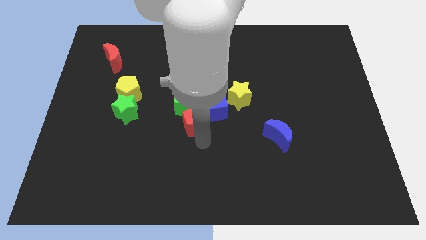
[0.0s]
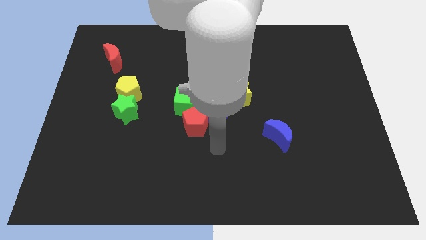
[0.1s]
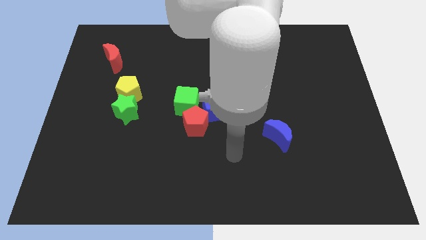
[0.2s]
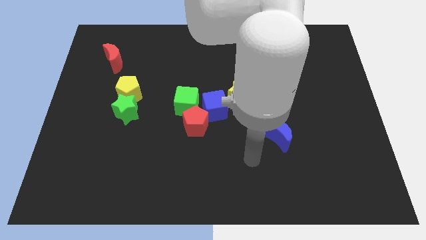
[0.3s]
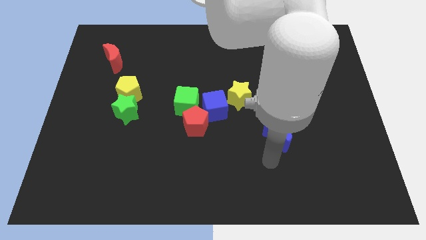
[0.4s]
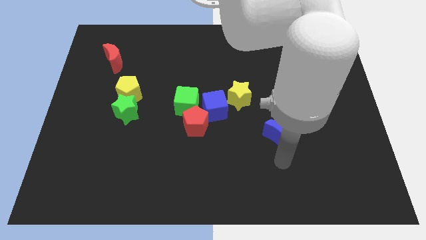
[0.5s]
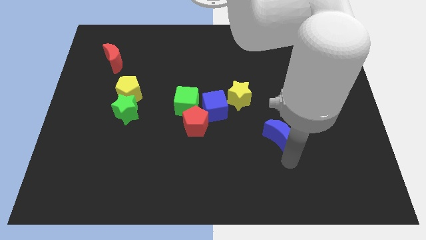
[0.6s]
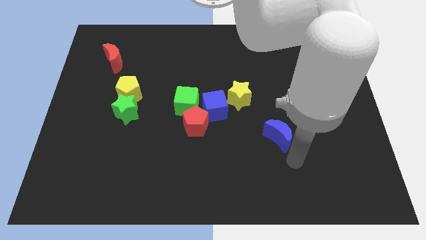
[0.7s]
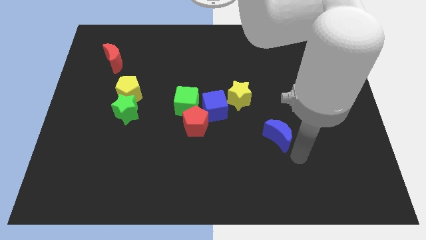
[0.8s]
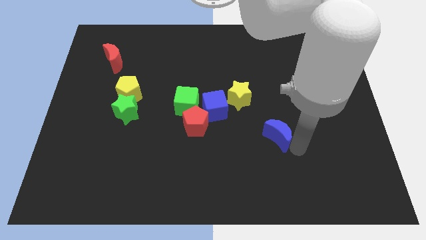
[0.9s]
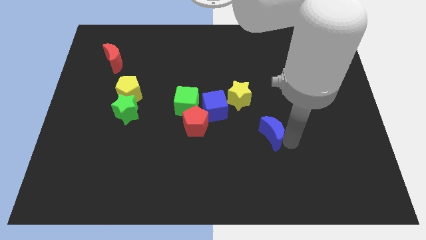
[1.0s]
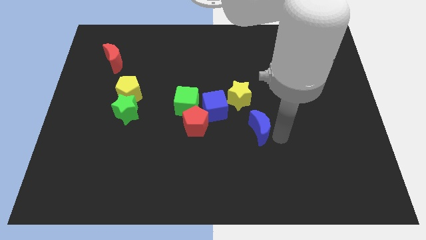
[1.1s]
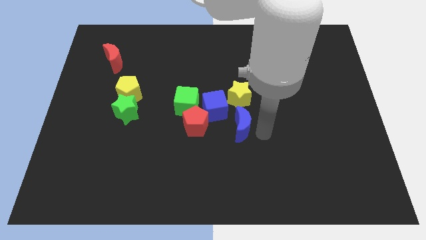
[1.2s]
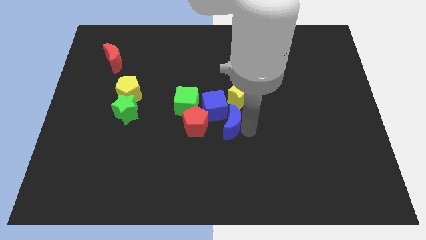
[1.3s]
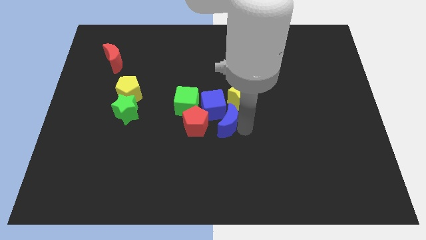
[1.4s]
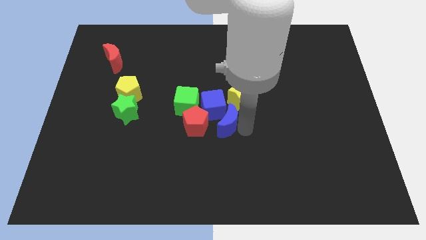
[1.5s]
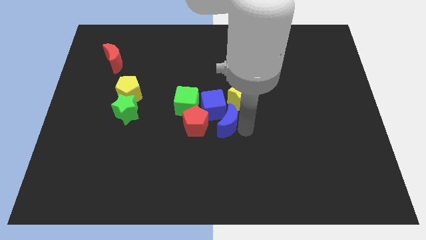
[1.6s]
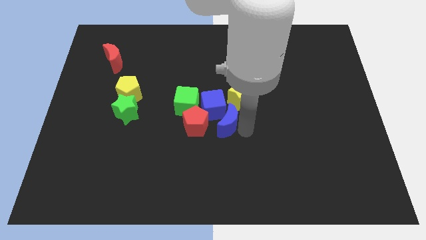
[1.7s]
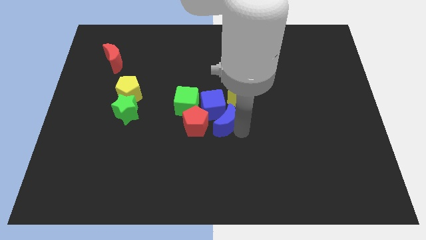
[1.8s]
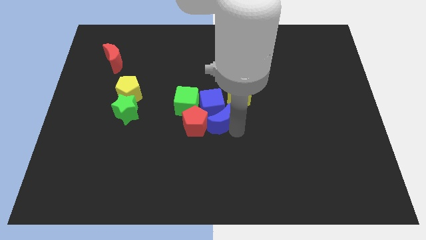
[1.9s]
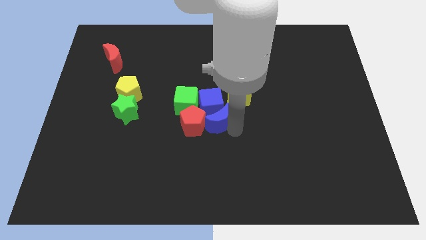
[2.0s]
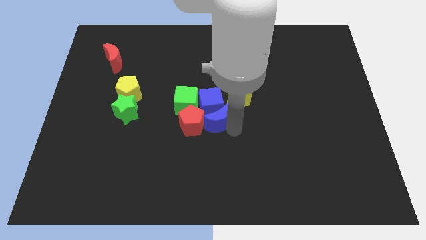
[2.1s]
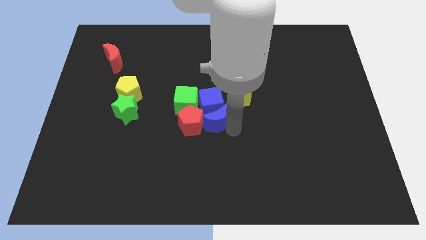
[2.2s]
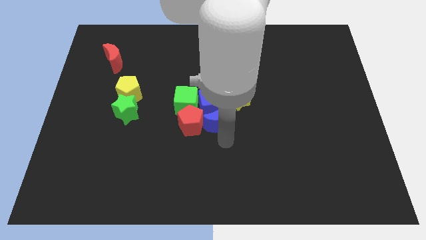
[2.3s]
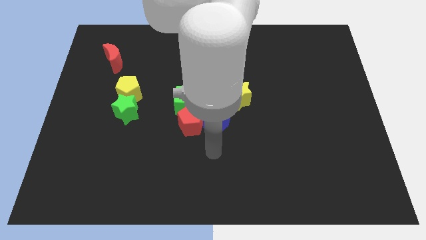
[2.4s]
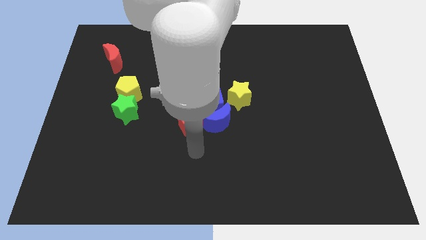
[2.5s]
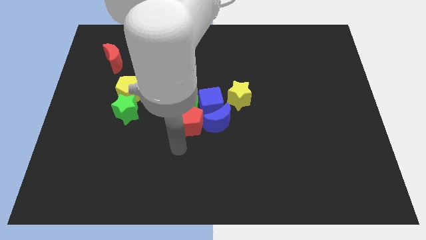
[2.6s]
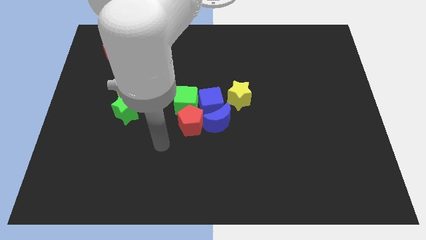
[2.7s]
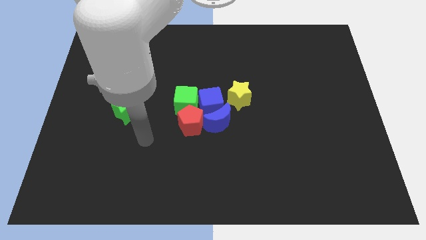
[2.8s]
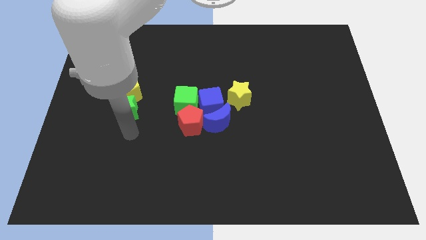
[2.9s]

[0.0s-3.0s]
push the blue crescent into the blue cube

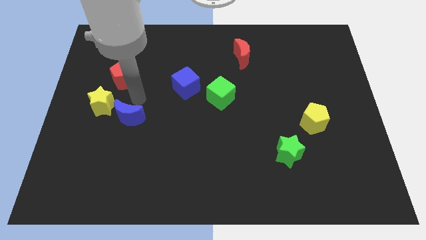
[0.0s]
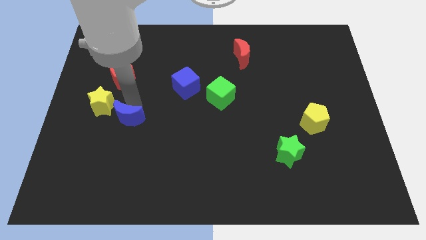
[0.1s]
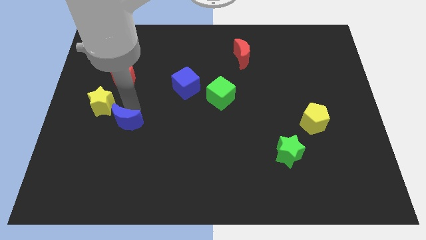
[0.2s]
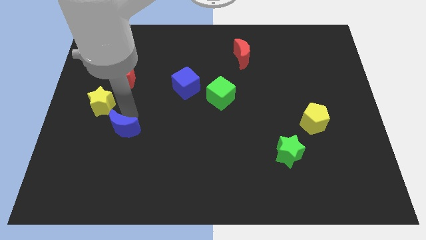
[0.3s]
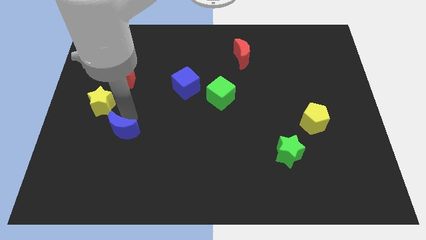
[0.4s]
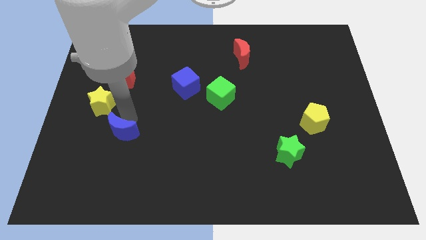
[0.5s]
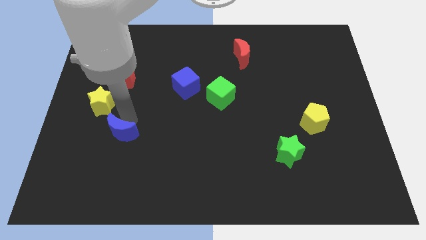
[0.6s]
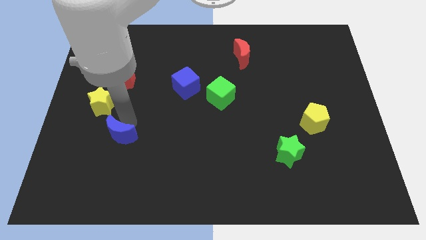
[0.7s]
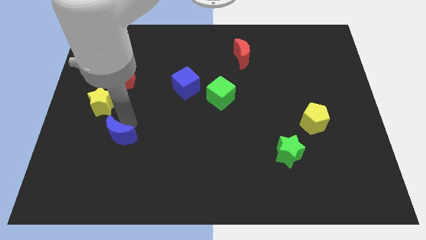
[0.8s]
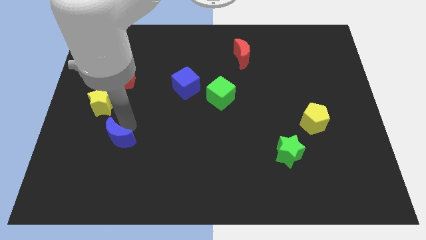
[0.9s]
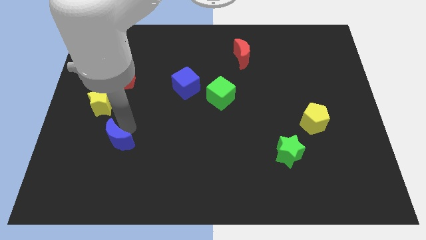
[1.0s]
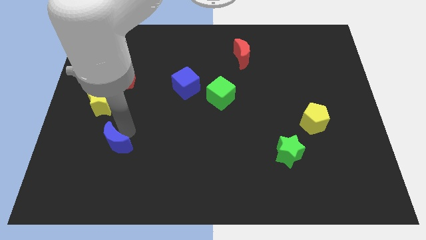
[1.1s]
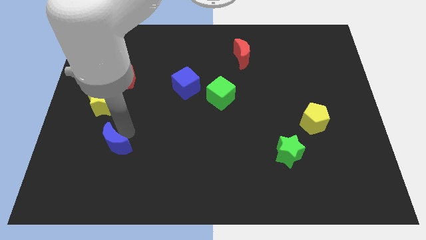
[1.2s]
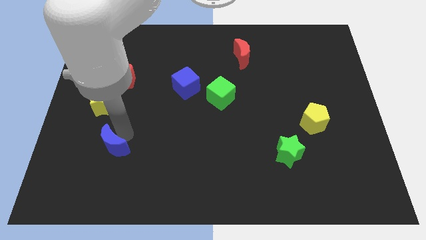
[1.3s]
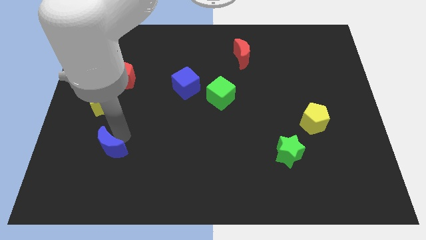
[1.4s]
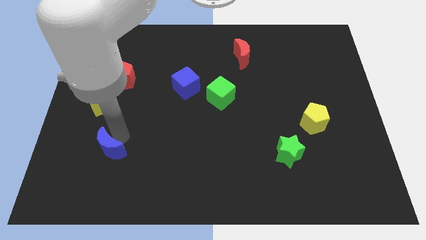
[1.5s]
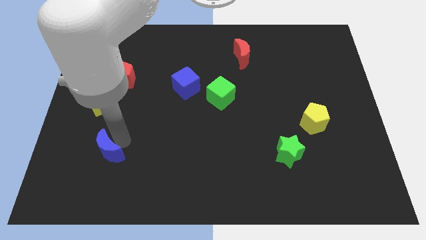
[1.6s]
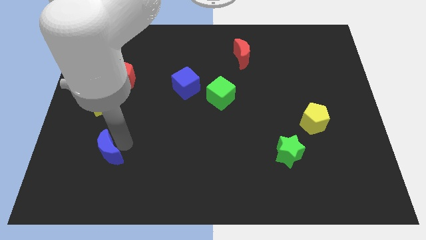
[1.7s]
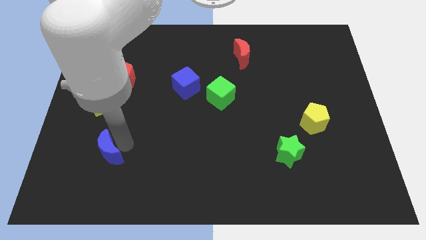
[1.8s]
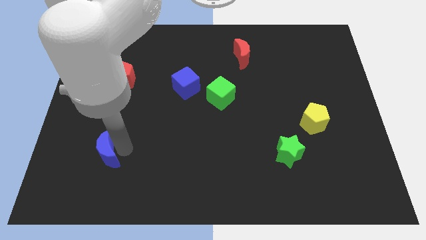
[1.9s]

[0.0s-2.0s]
push the blue crescent towards down

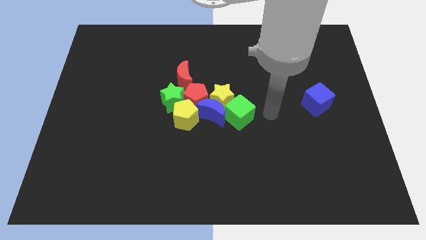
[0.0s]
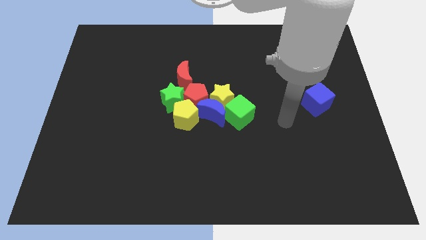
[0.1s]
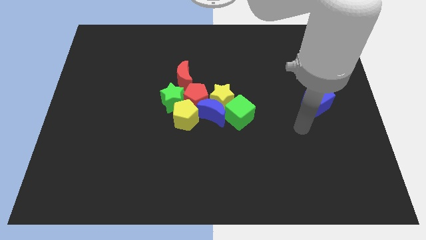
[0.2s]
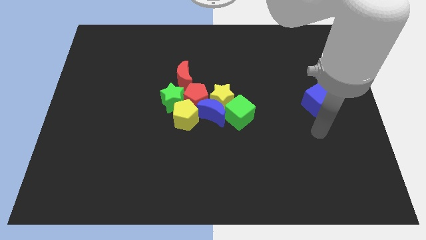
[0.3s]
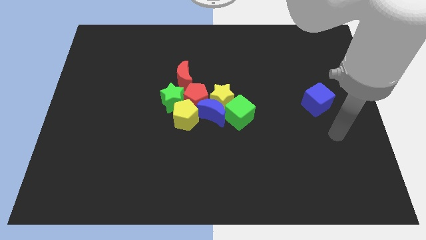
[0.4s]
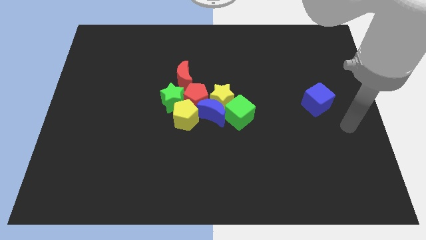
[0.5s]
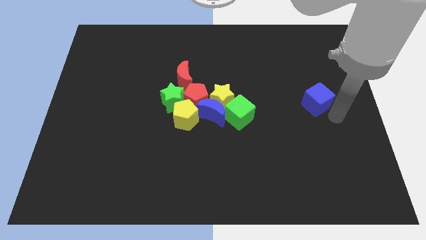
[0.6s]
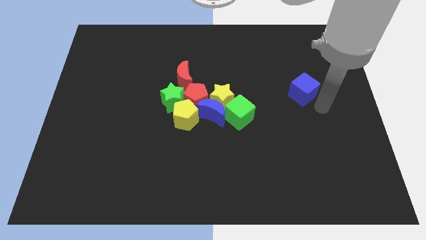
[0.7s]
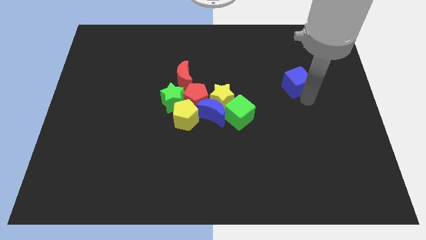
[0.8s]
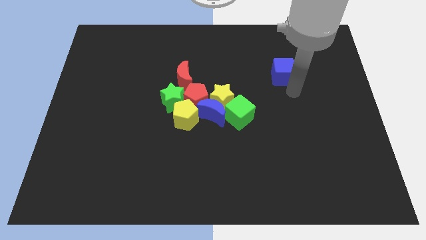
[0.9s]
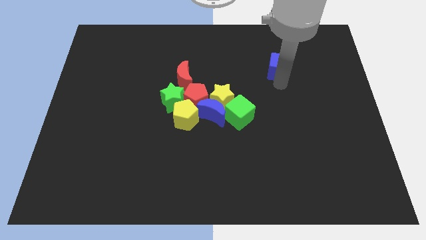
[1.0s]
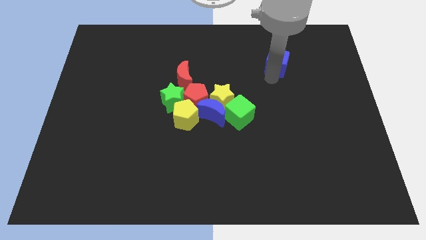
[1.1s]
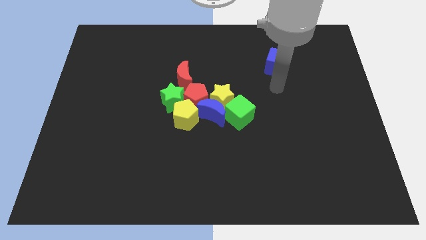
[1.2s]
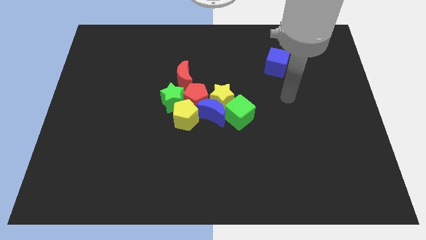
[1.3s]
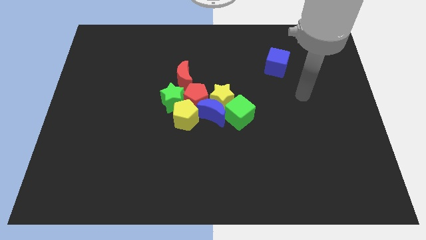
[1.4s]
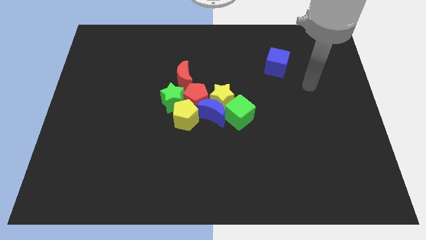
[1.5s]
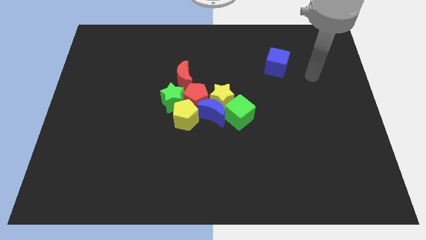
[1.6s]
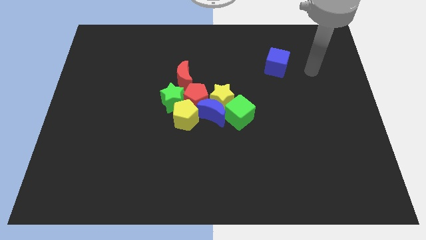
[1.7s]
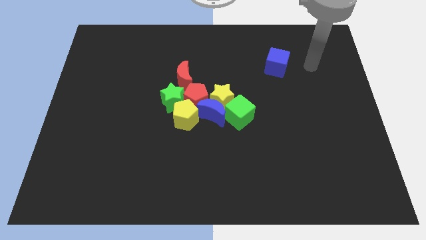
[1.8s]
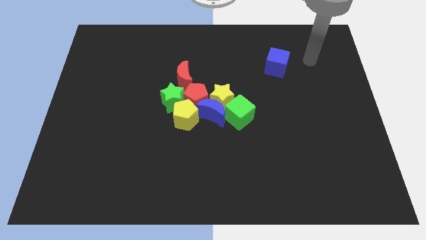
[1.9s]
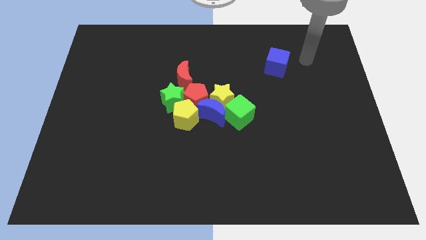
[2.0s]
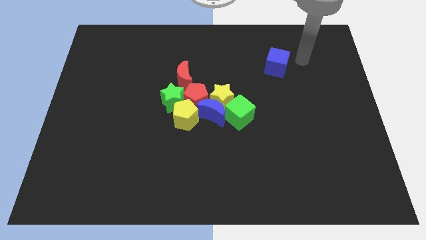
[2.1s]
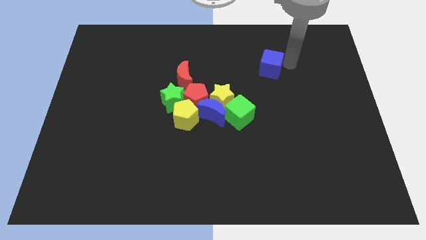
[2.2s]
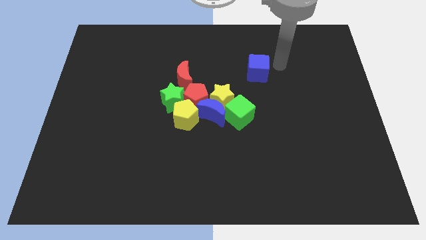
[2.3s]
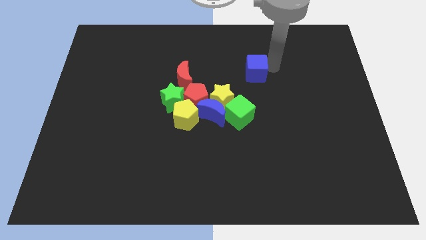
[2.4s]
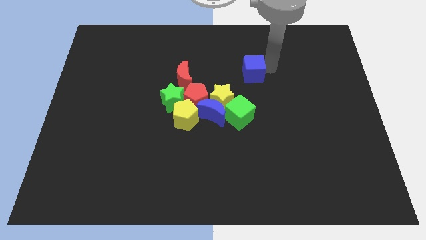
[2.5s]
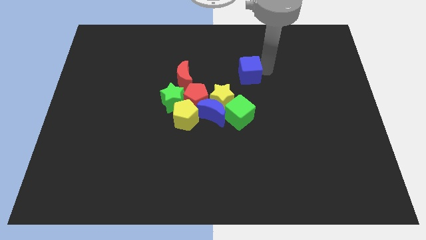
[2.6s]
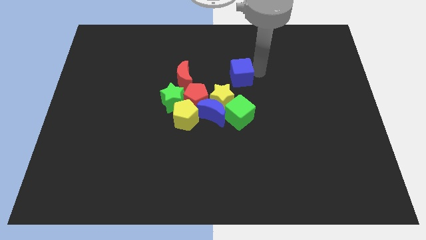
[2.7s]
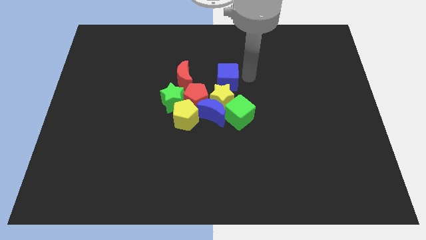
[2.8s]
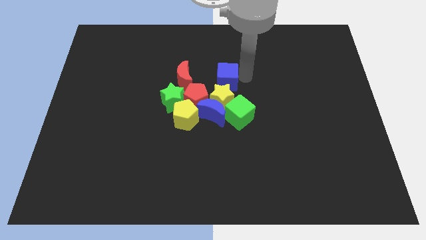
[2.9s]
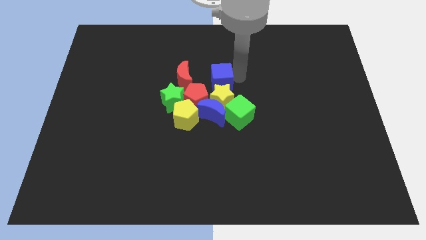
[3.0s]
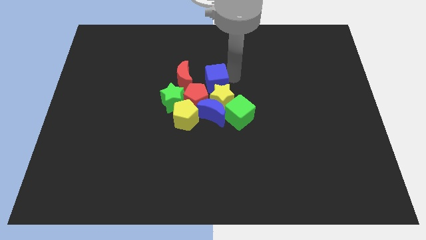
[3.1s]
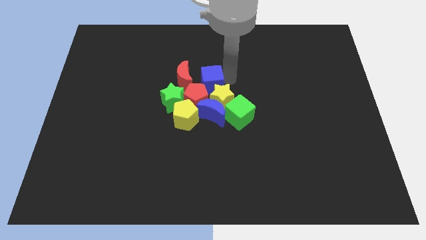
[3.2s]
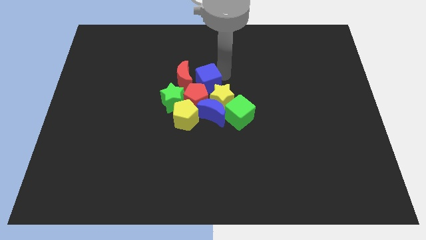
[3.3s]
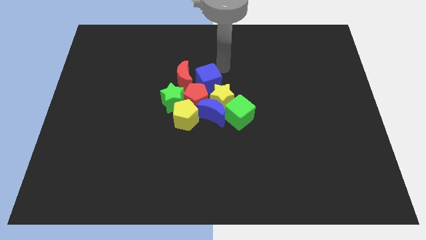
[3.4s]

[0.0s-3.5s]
move the blue cube to the top of the yellow star

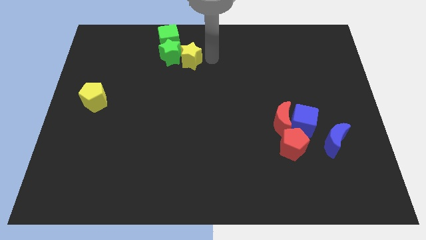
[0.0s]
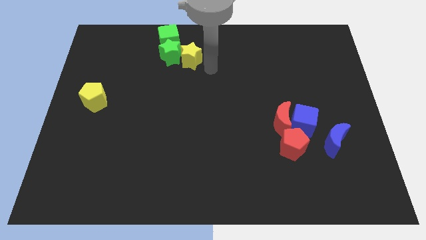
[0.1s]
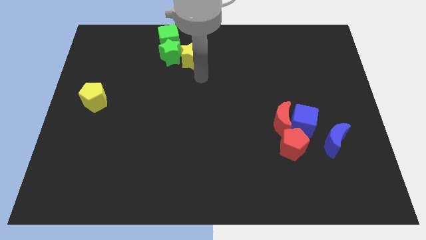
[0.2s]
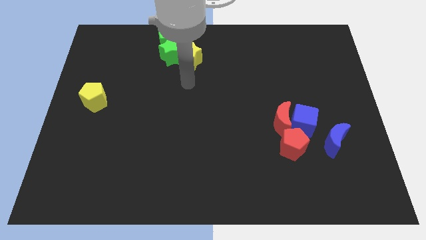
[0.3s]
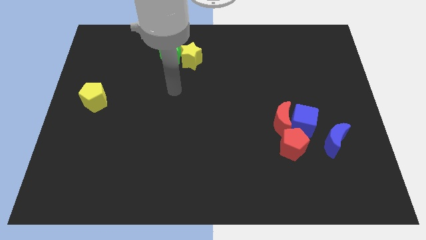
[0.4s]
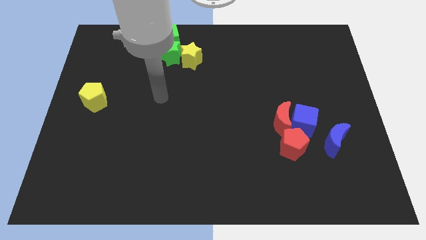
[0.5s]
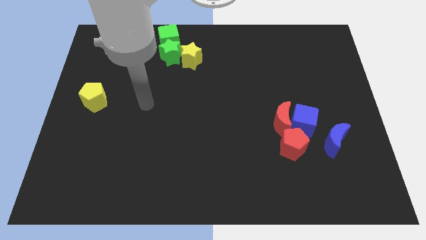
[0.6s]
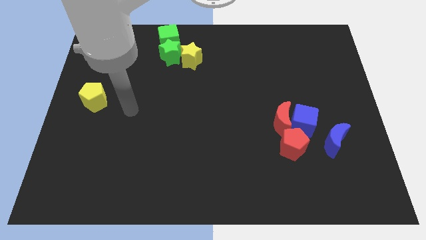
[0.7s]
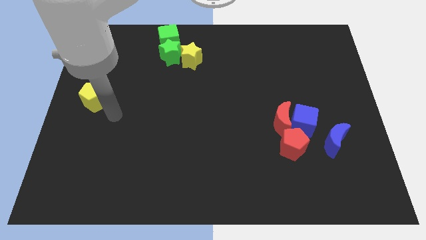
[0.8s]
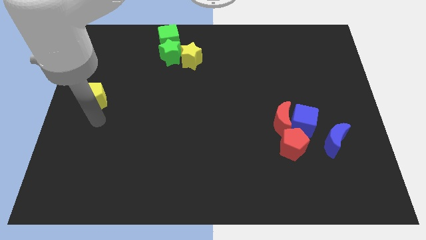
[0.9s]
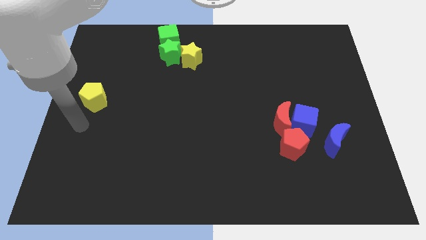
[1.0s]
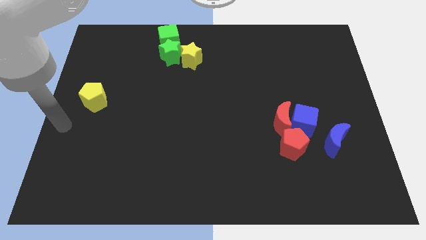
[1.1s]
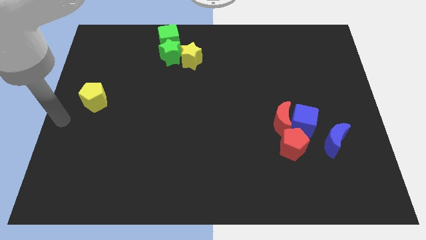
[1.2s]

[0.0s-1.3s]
move your arm to the left center of the board
